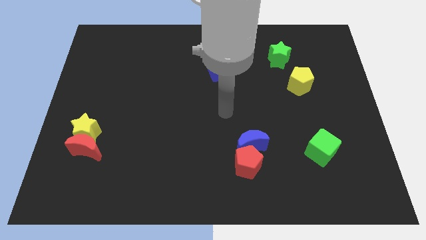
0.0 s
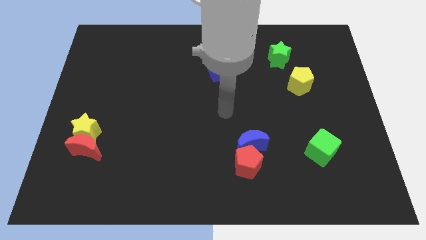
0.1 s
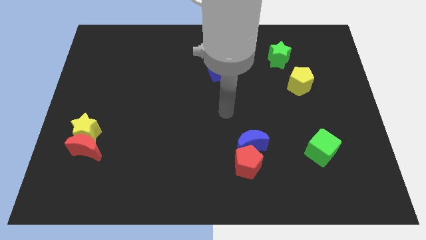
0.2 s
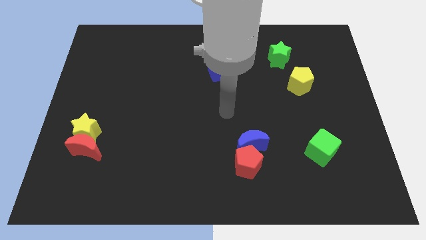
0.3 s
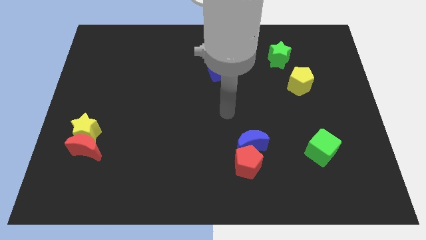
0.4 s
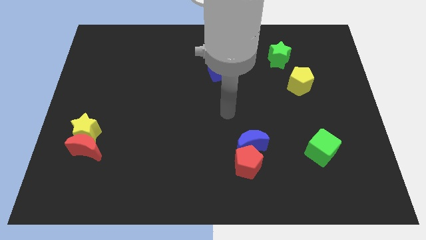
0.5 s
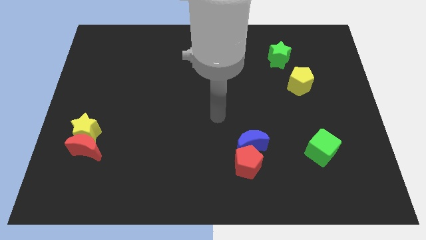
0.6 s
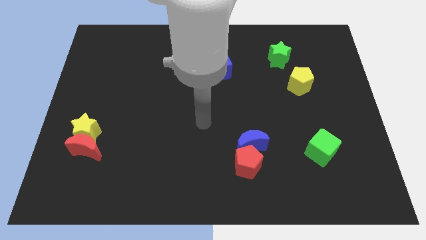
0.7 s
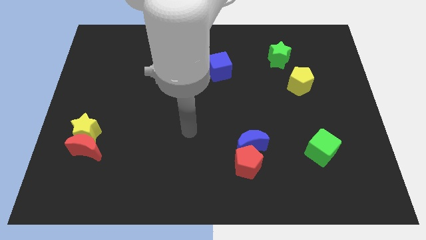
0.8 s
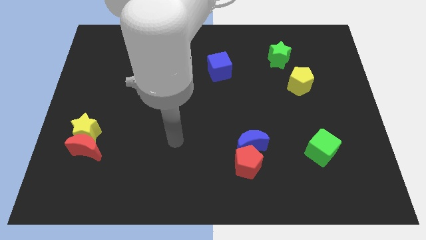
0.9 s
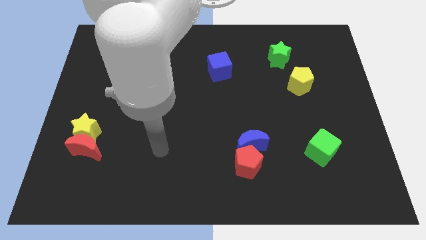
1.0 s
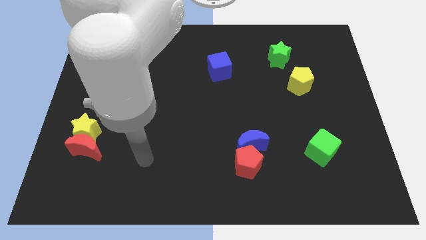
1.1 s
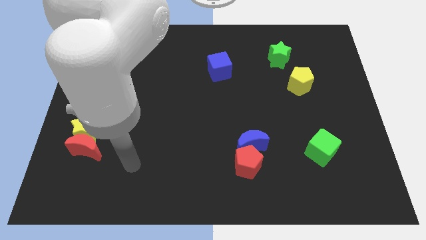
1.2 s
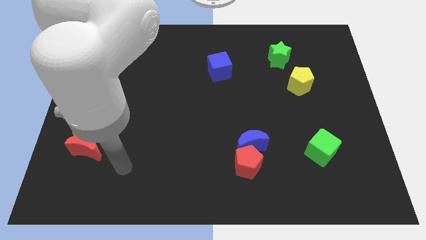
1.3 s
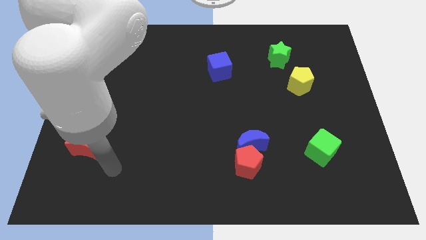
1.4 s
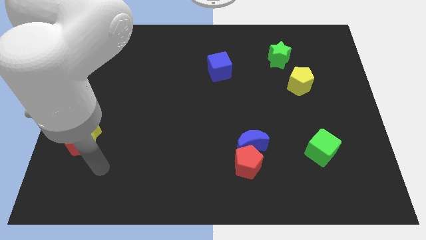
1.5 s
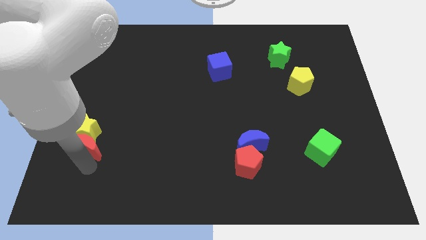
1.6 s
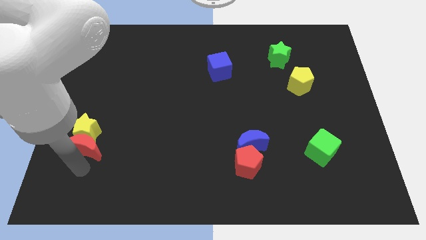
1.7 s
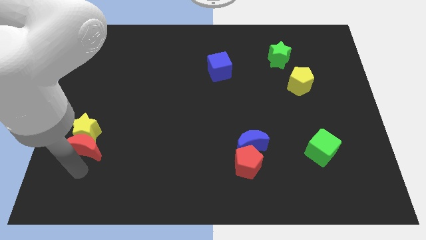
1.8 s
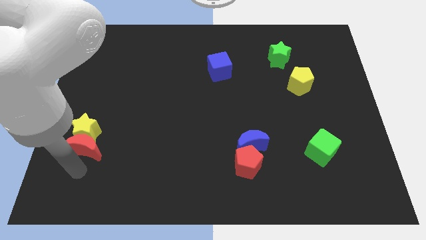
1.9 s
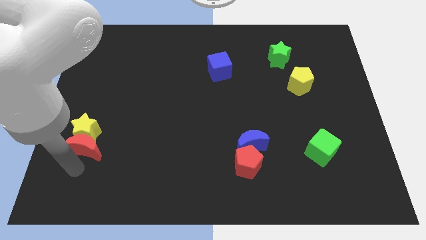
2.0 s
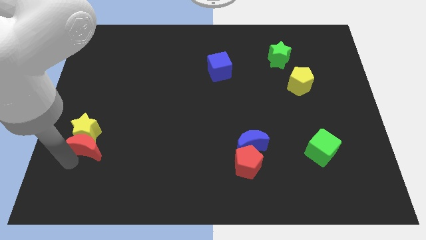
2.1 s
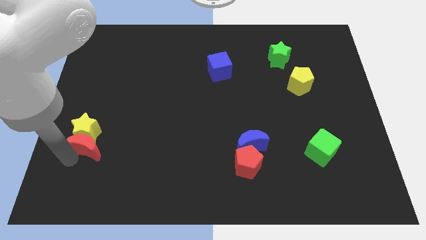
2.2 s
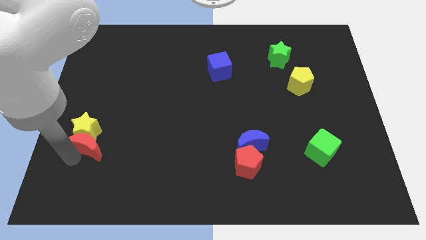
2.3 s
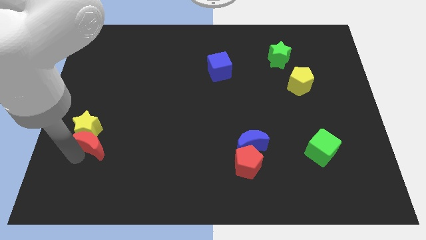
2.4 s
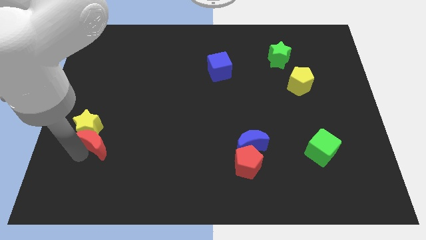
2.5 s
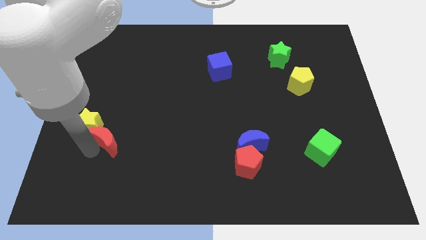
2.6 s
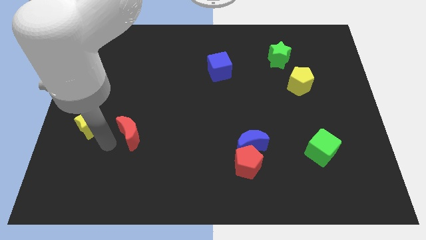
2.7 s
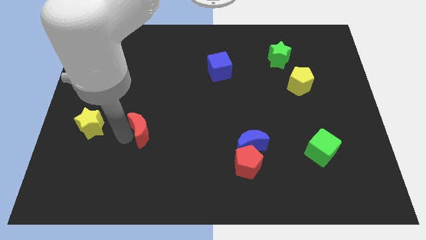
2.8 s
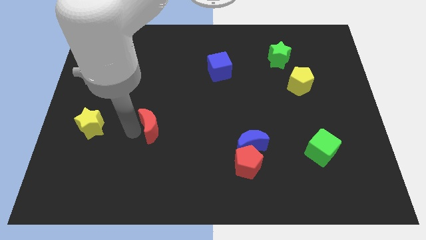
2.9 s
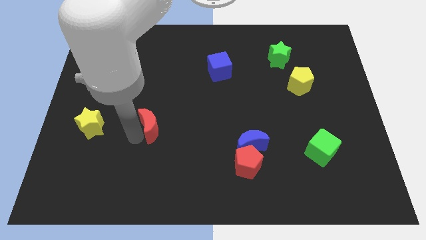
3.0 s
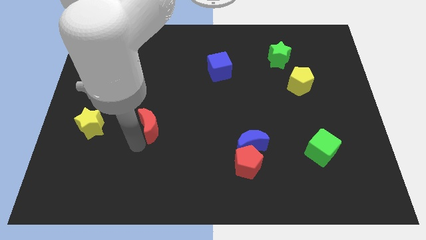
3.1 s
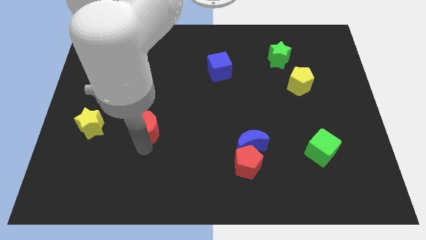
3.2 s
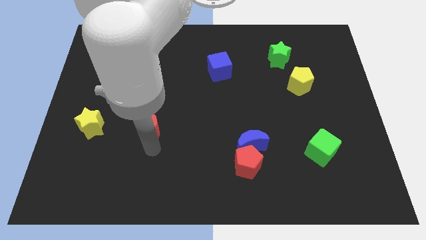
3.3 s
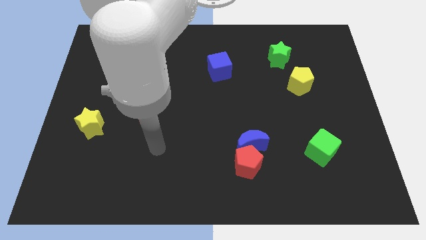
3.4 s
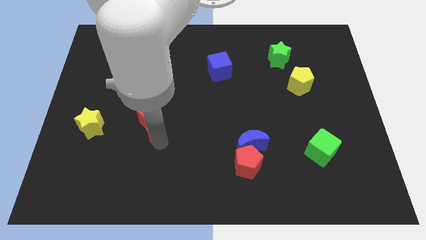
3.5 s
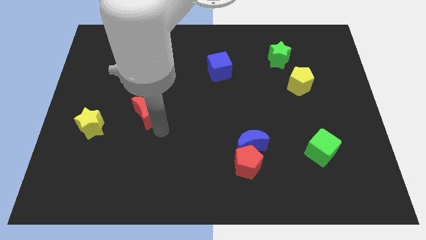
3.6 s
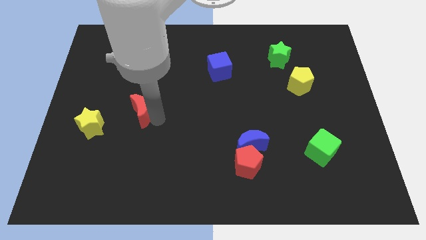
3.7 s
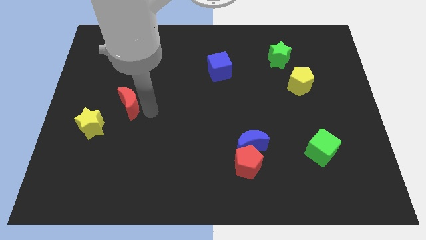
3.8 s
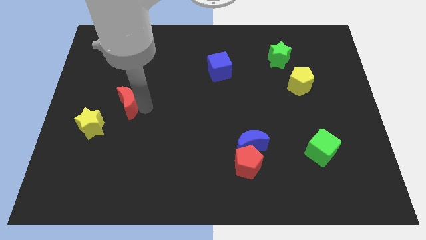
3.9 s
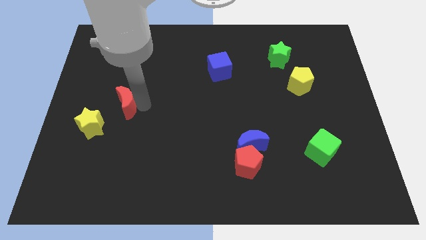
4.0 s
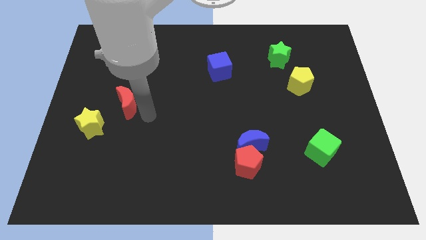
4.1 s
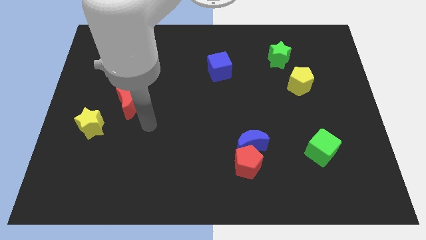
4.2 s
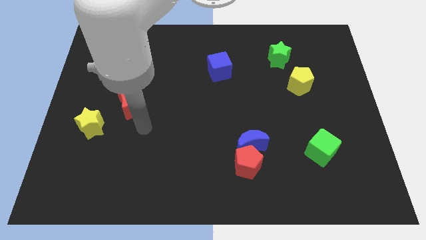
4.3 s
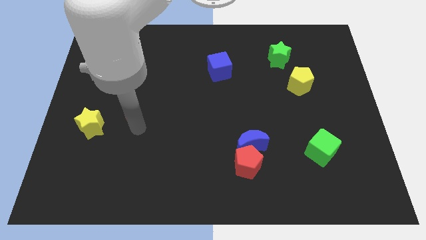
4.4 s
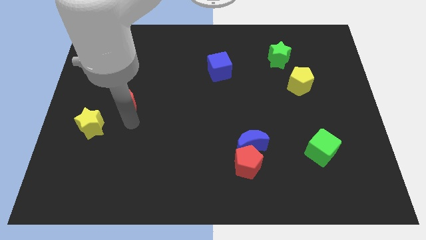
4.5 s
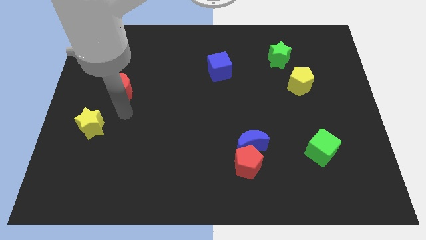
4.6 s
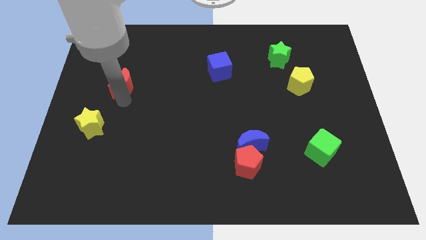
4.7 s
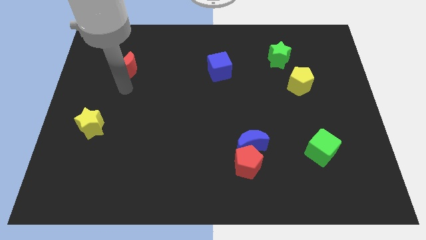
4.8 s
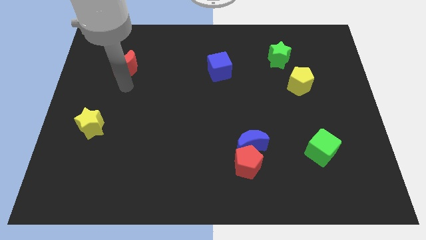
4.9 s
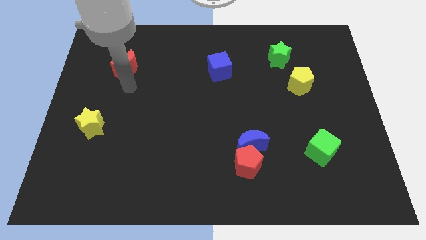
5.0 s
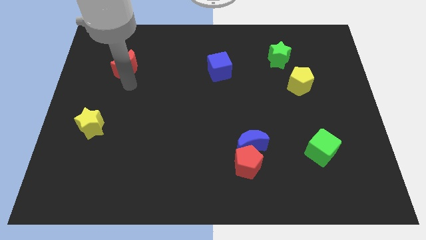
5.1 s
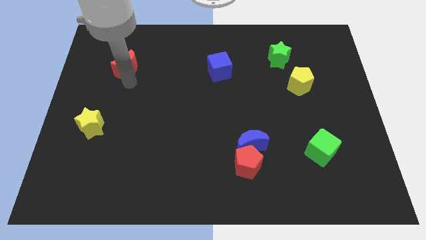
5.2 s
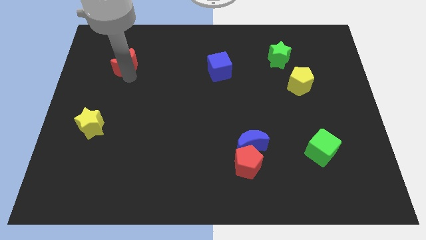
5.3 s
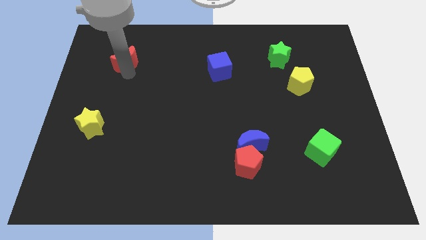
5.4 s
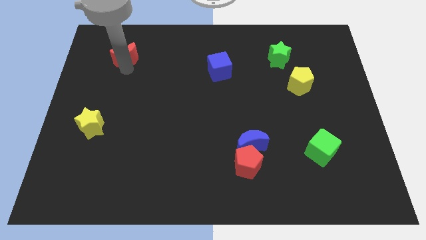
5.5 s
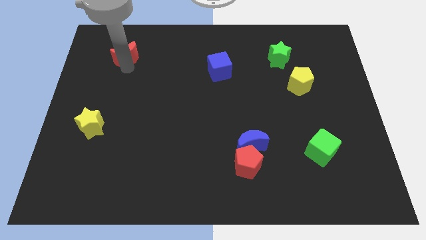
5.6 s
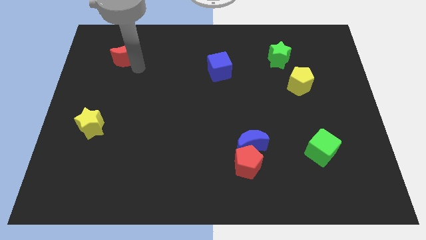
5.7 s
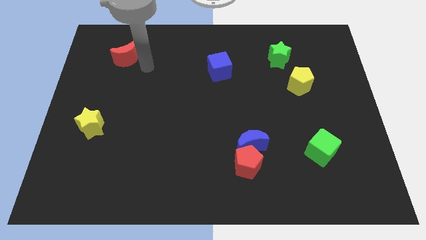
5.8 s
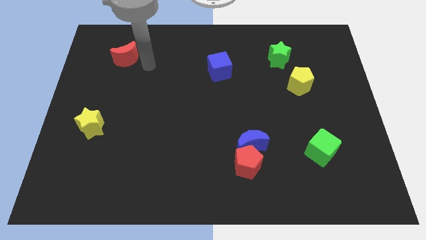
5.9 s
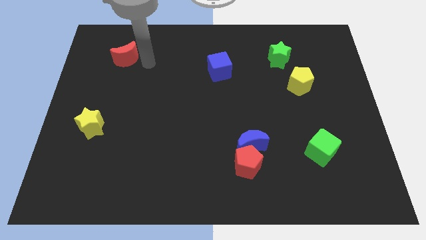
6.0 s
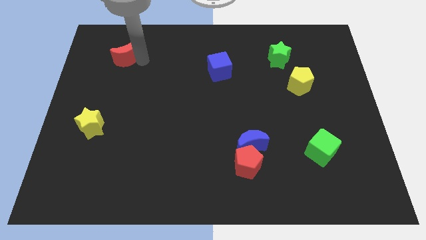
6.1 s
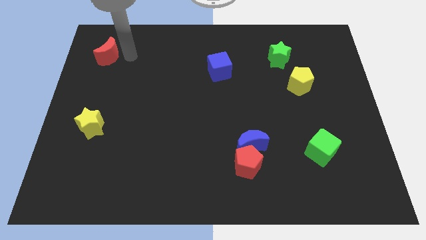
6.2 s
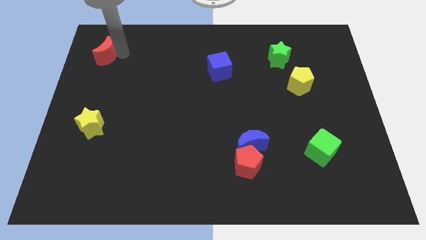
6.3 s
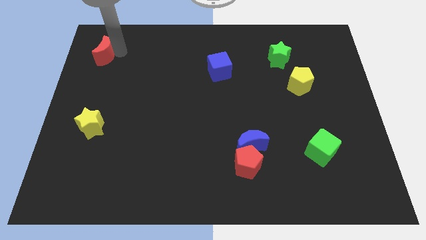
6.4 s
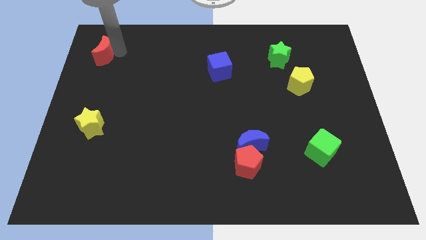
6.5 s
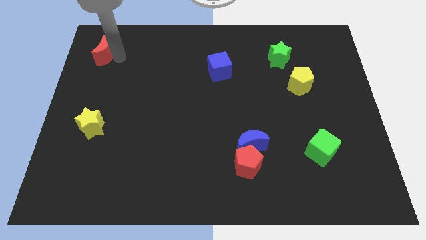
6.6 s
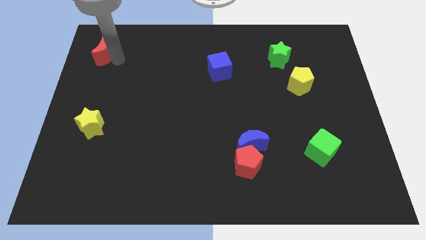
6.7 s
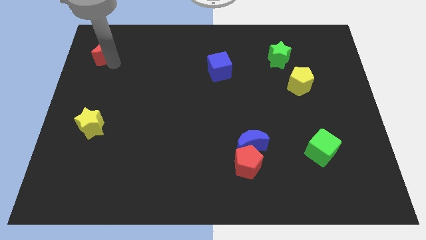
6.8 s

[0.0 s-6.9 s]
move the red crescent to the left top

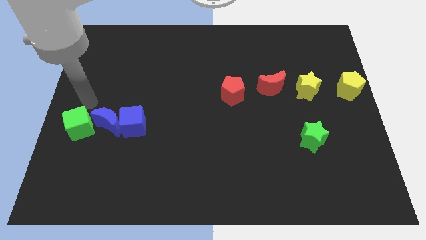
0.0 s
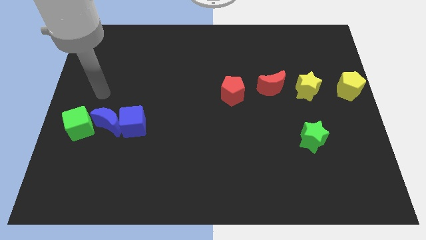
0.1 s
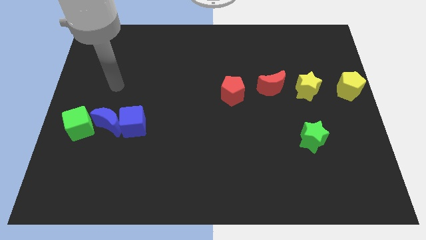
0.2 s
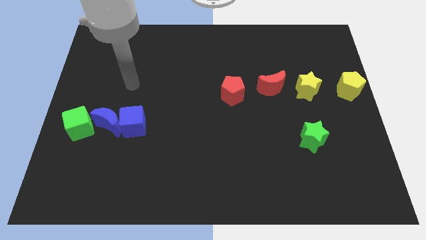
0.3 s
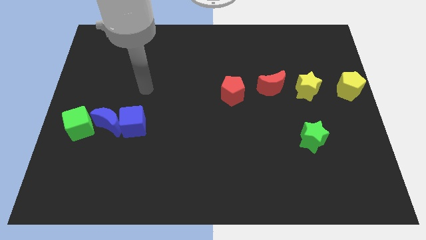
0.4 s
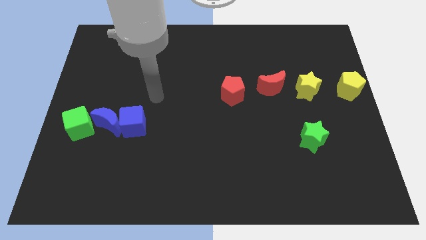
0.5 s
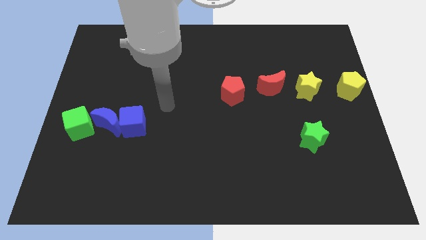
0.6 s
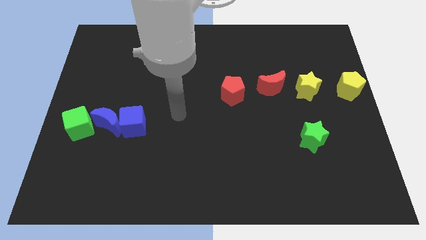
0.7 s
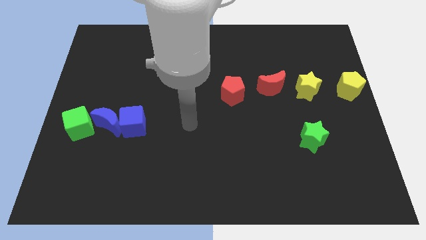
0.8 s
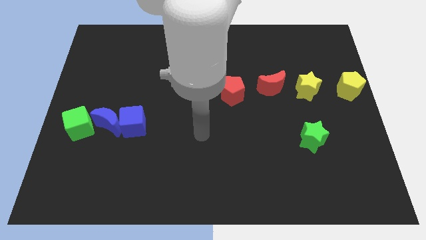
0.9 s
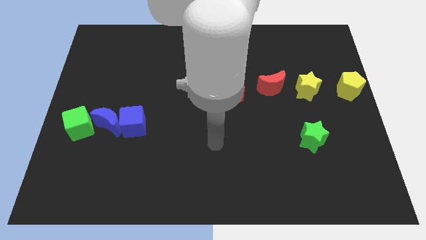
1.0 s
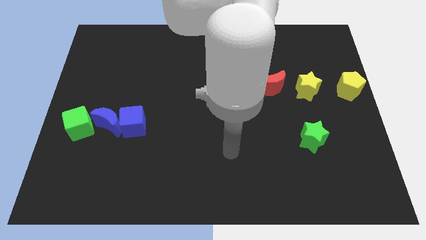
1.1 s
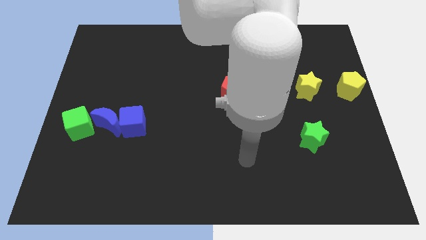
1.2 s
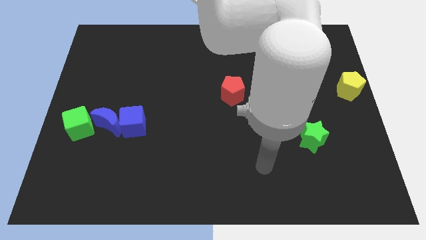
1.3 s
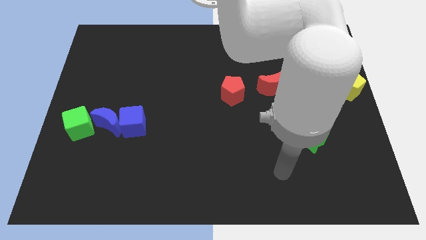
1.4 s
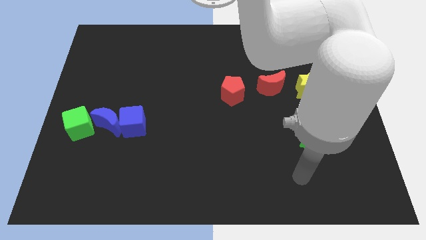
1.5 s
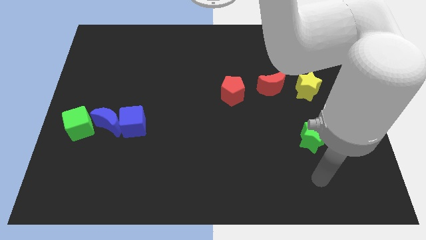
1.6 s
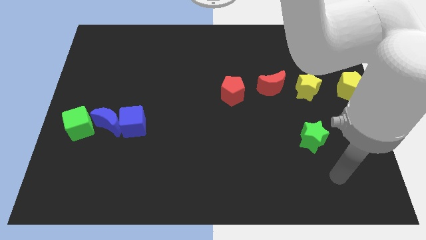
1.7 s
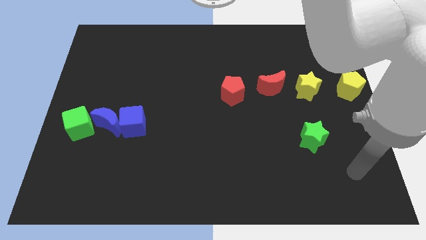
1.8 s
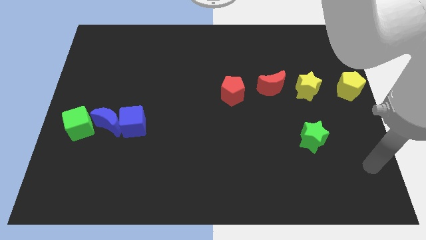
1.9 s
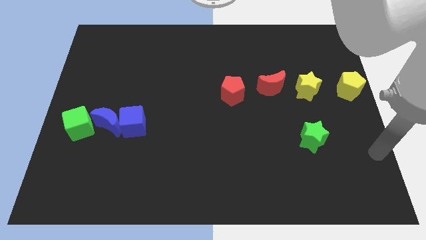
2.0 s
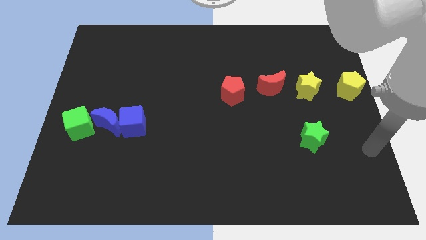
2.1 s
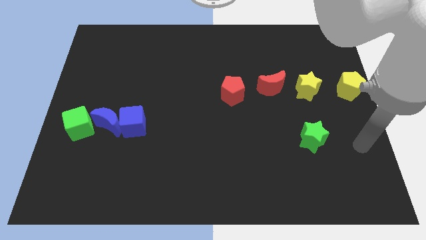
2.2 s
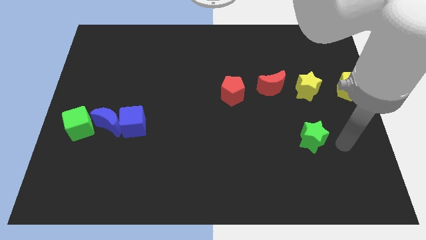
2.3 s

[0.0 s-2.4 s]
move your arm towards the right of the green star
